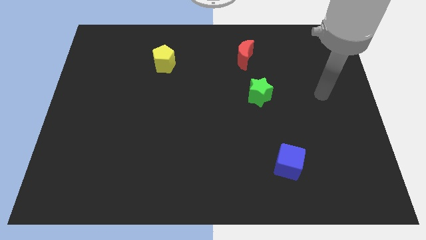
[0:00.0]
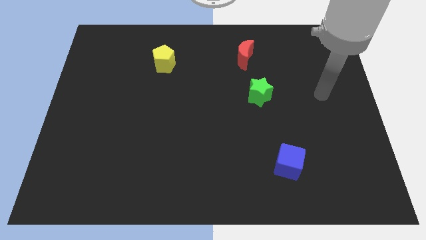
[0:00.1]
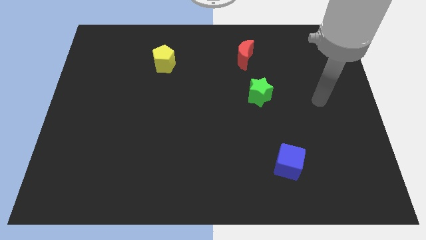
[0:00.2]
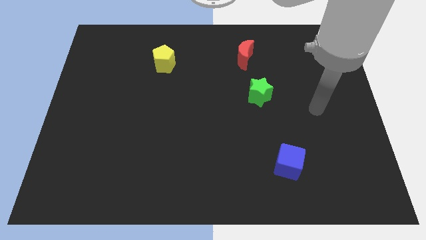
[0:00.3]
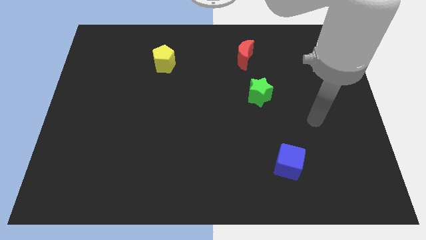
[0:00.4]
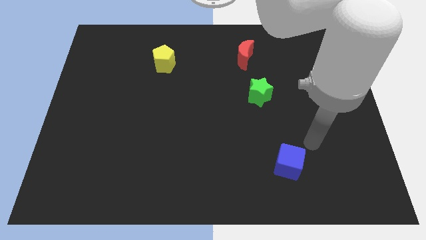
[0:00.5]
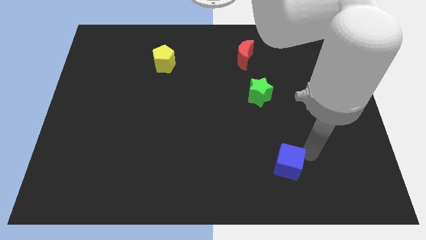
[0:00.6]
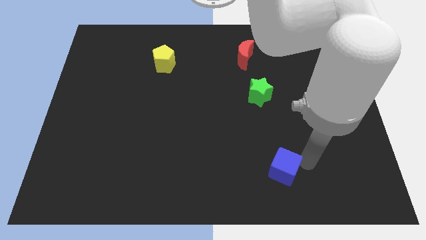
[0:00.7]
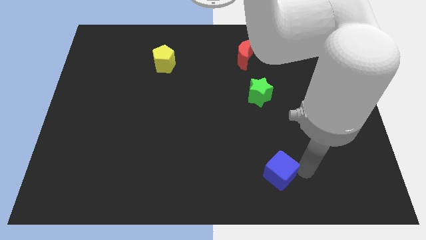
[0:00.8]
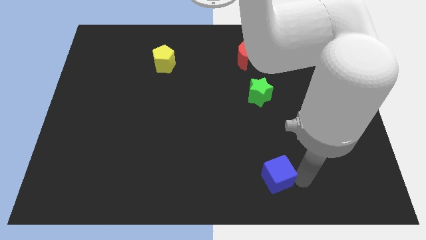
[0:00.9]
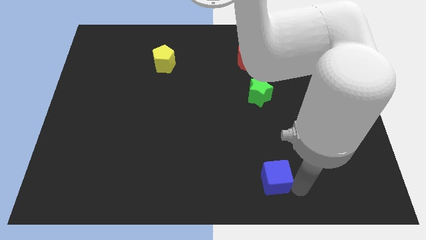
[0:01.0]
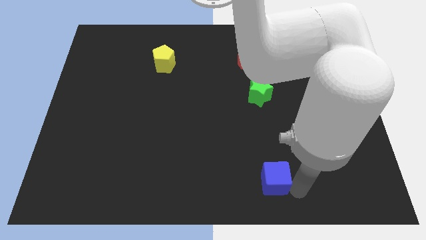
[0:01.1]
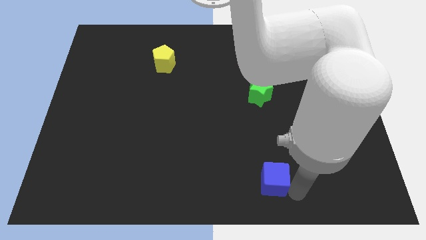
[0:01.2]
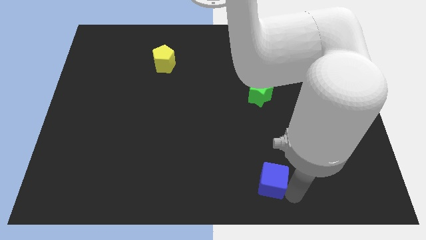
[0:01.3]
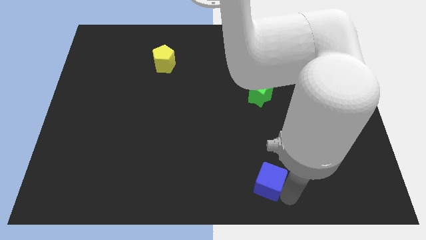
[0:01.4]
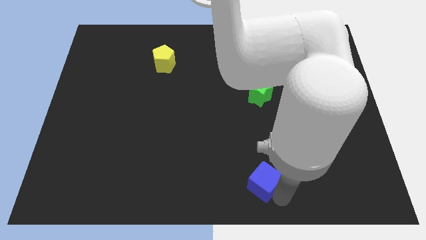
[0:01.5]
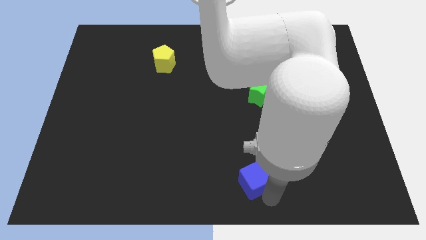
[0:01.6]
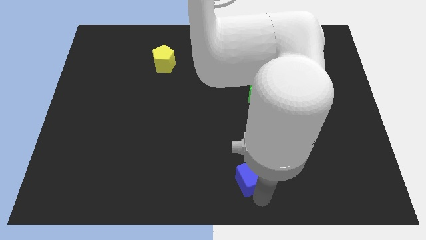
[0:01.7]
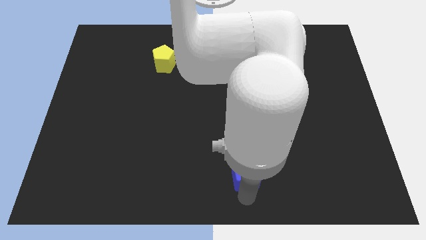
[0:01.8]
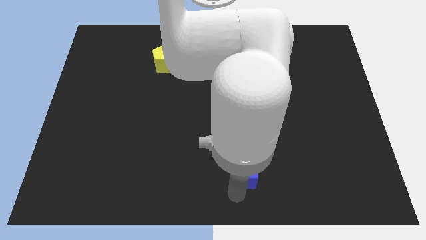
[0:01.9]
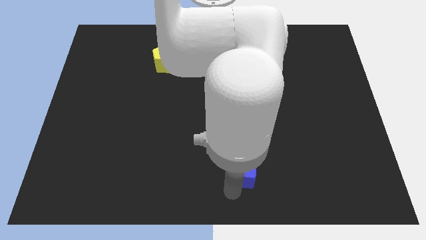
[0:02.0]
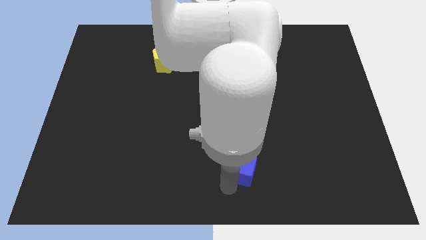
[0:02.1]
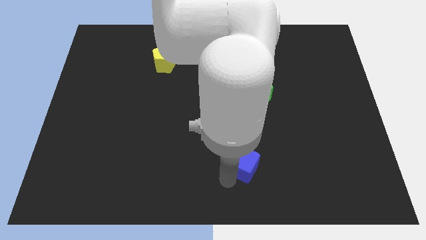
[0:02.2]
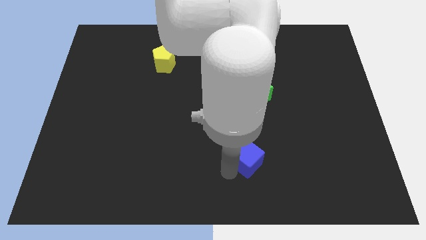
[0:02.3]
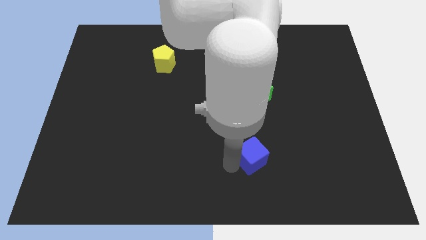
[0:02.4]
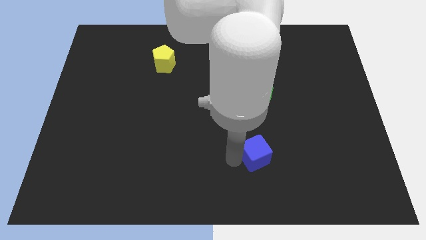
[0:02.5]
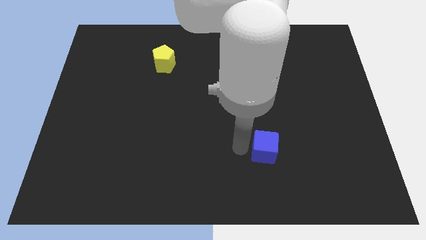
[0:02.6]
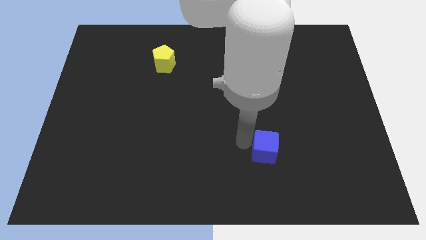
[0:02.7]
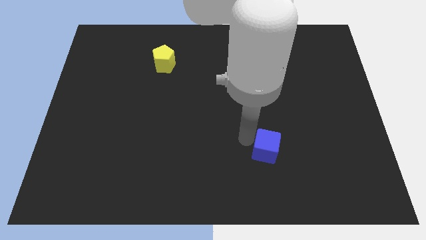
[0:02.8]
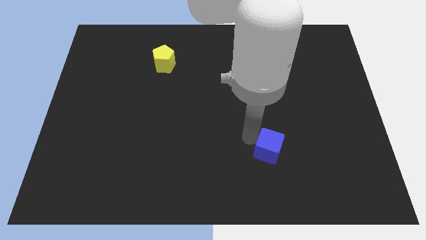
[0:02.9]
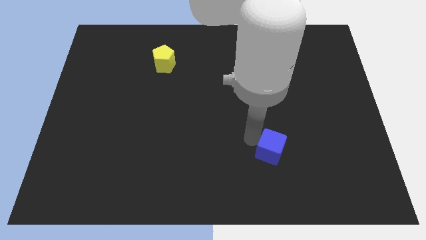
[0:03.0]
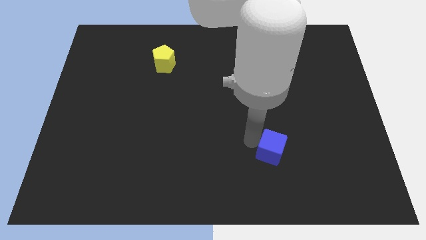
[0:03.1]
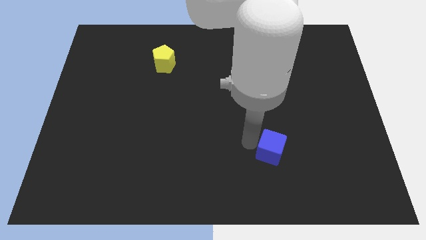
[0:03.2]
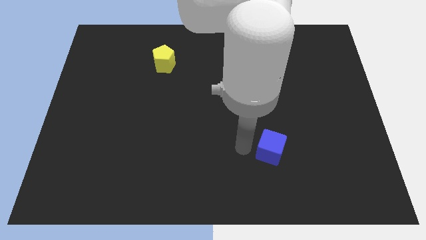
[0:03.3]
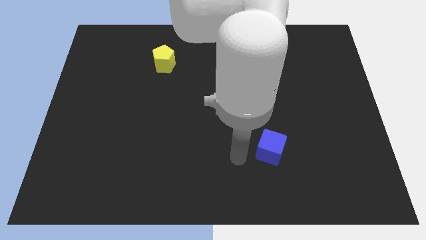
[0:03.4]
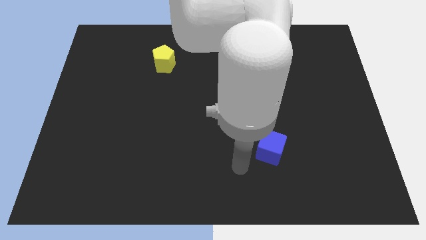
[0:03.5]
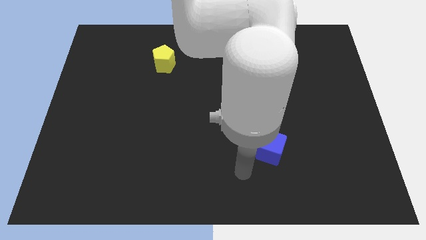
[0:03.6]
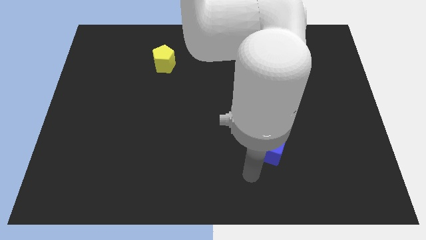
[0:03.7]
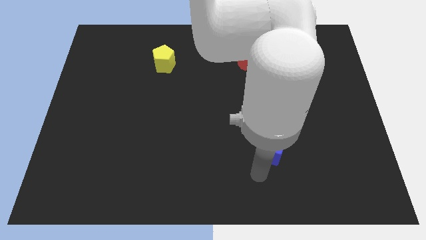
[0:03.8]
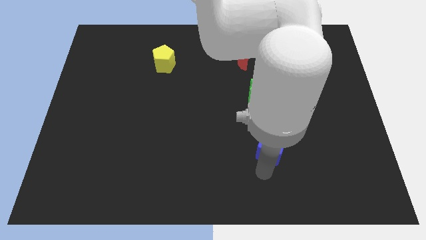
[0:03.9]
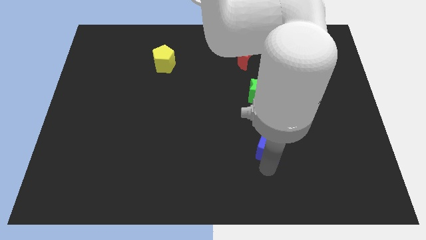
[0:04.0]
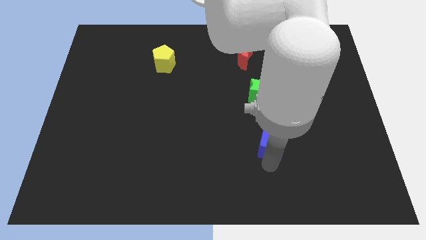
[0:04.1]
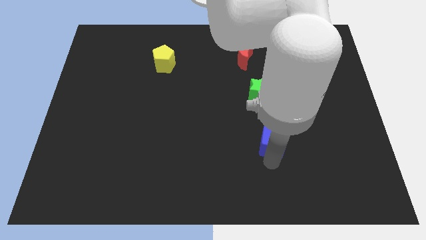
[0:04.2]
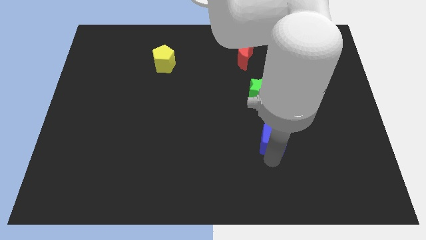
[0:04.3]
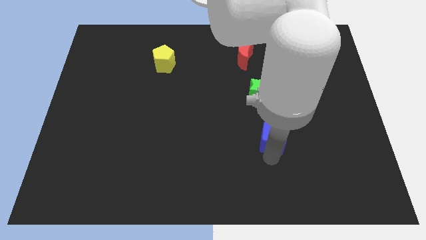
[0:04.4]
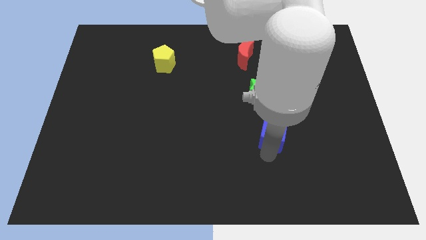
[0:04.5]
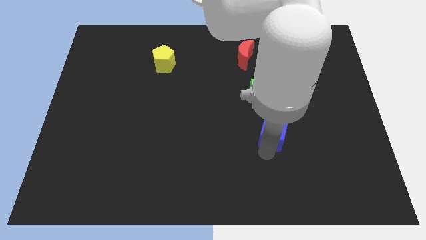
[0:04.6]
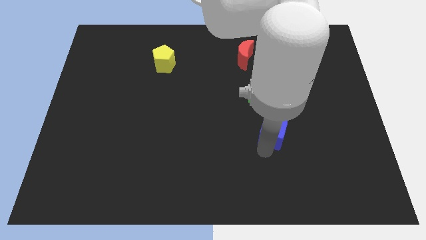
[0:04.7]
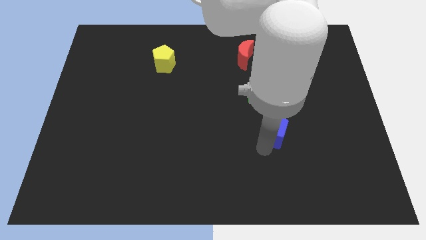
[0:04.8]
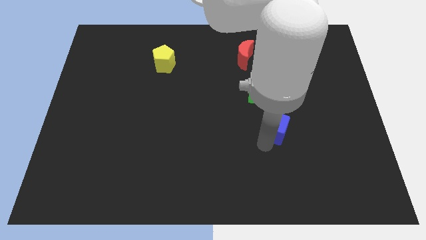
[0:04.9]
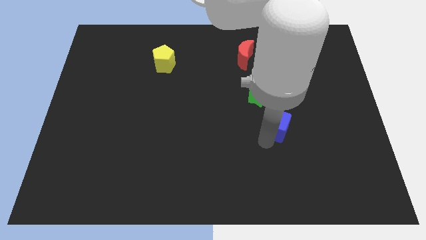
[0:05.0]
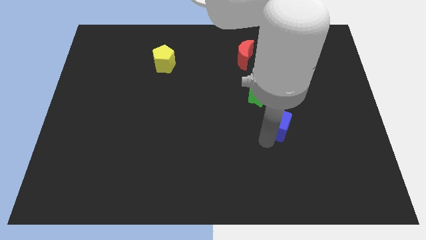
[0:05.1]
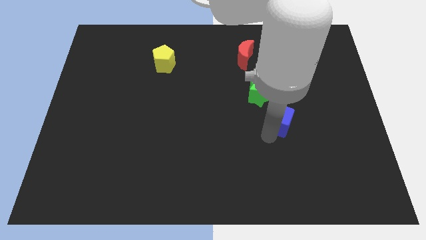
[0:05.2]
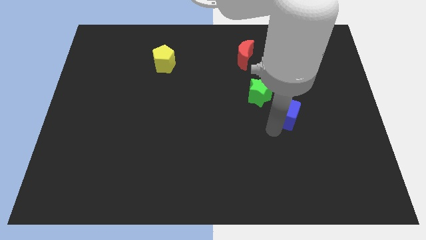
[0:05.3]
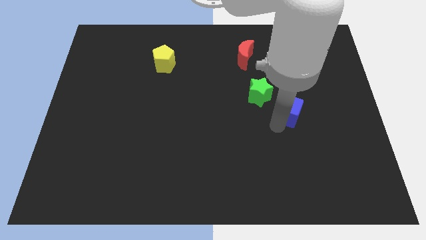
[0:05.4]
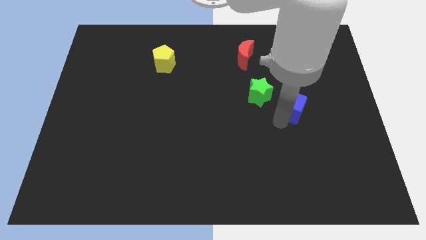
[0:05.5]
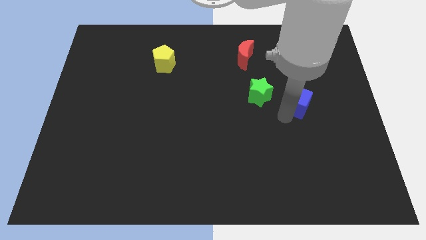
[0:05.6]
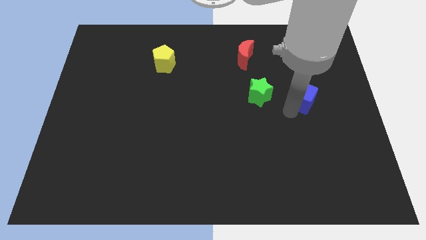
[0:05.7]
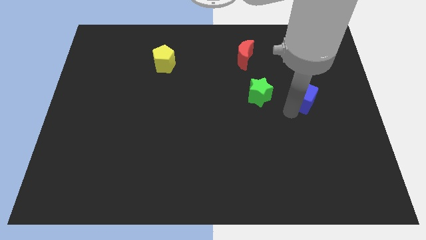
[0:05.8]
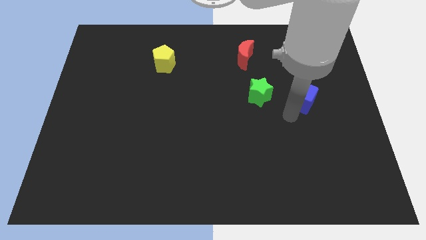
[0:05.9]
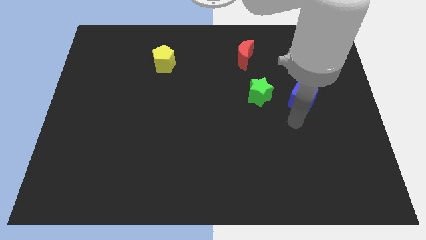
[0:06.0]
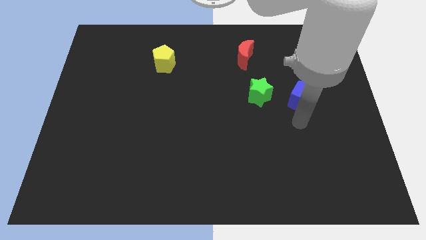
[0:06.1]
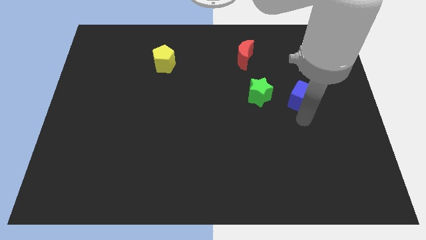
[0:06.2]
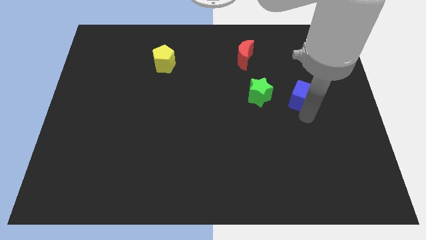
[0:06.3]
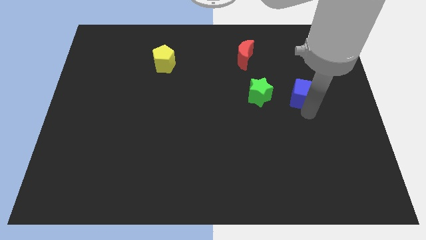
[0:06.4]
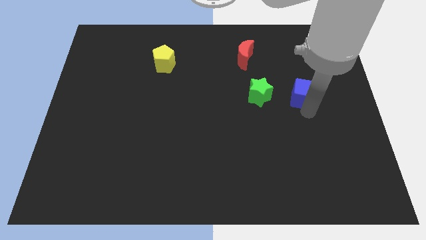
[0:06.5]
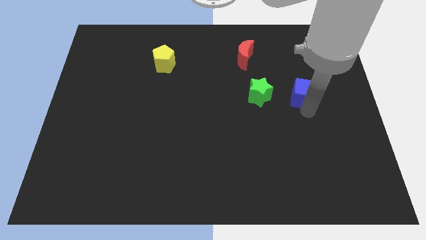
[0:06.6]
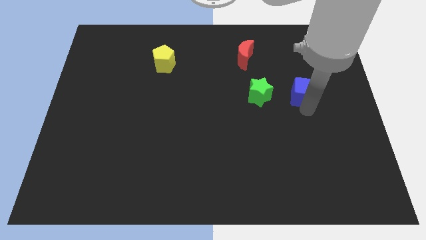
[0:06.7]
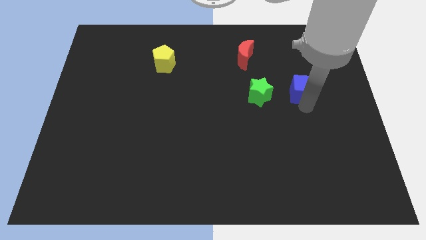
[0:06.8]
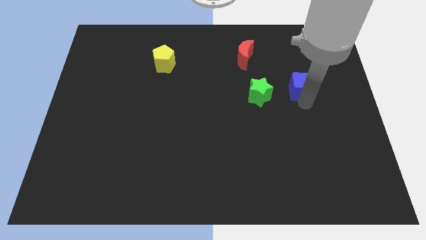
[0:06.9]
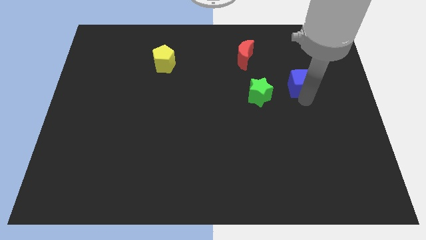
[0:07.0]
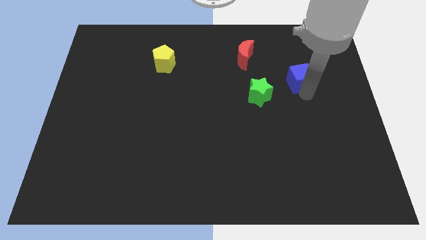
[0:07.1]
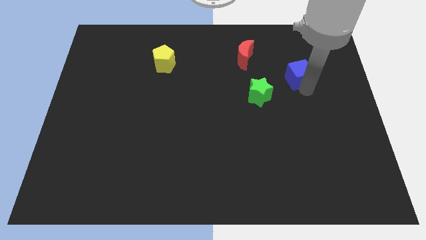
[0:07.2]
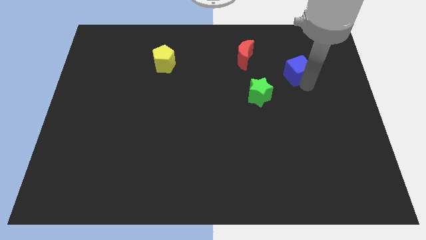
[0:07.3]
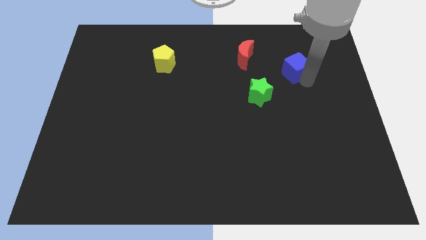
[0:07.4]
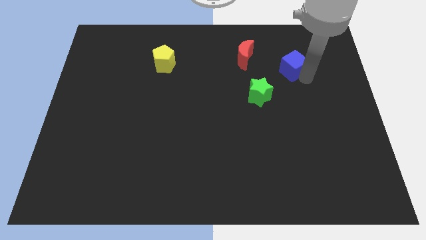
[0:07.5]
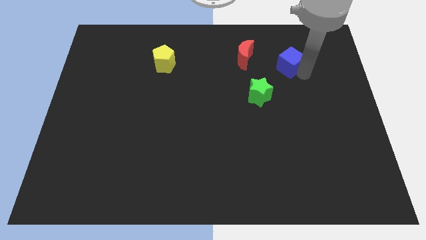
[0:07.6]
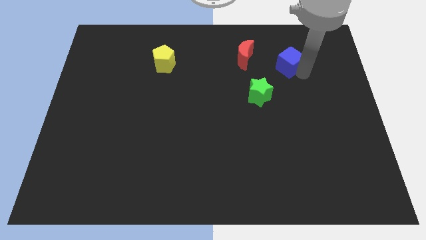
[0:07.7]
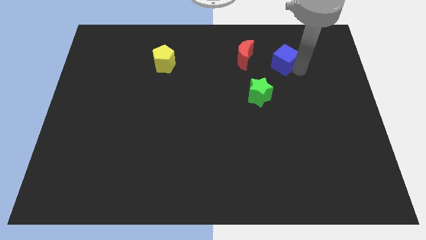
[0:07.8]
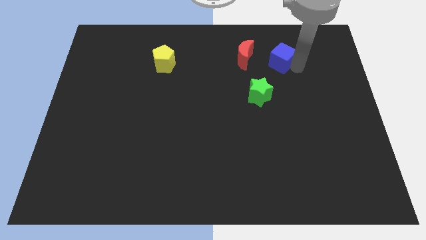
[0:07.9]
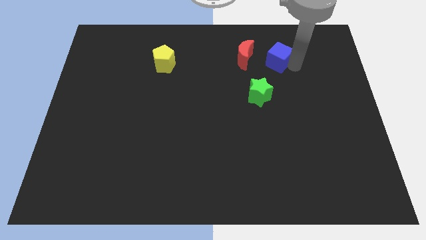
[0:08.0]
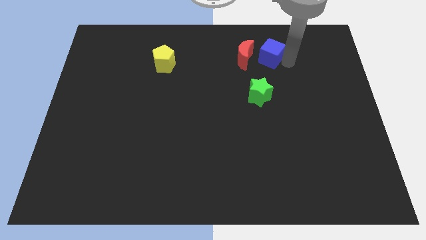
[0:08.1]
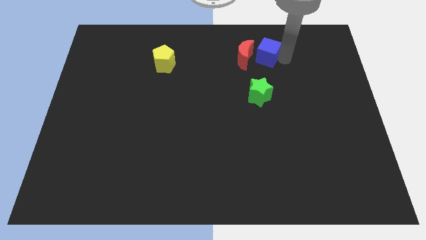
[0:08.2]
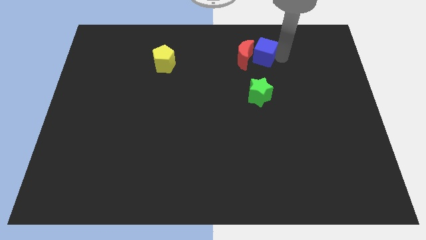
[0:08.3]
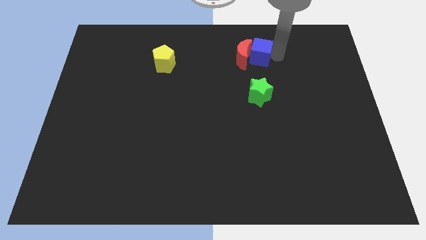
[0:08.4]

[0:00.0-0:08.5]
put the cube to the moon

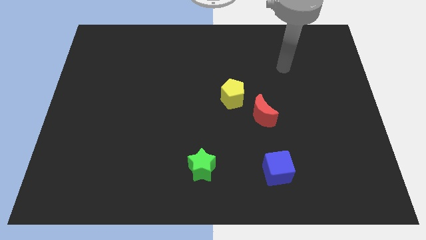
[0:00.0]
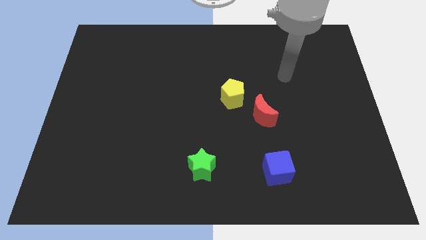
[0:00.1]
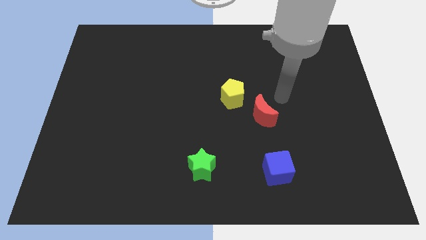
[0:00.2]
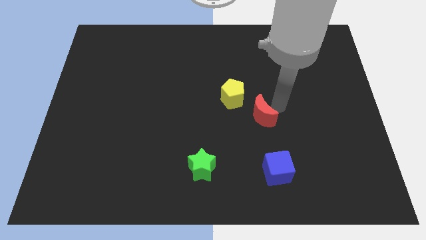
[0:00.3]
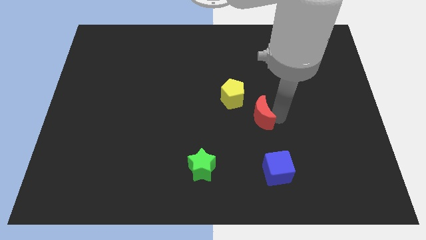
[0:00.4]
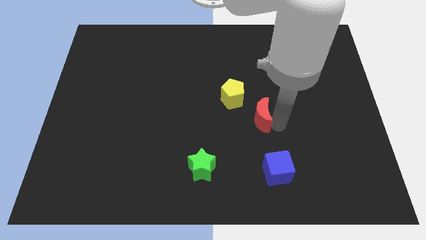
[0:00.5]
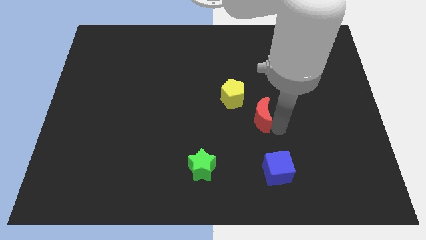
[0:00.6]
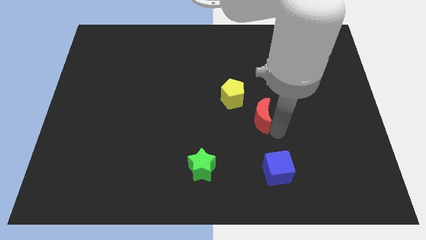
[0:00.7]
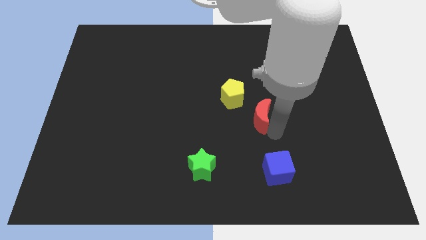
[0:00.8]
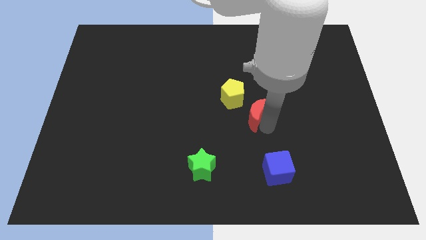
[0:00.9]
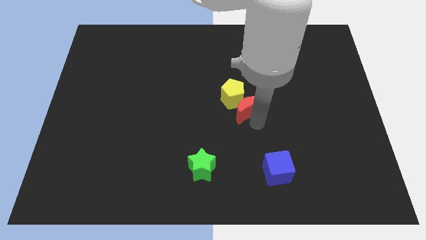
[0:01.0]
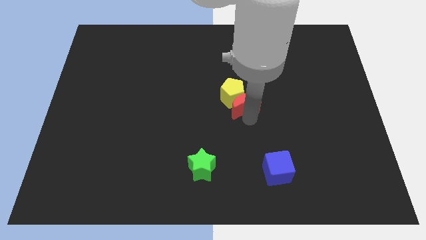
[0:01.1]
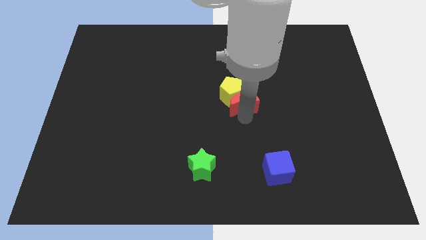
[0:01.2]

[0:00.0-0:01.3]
put the red block close to the pentagon
